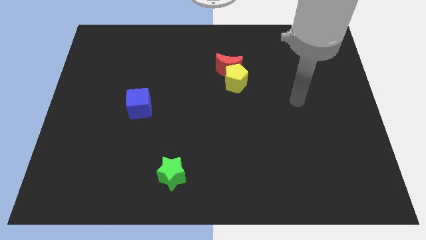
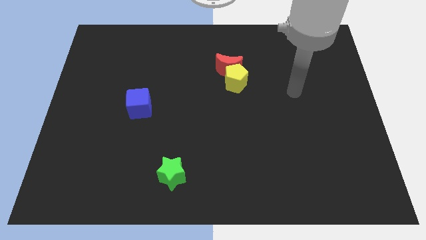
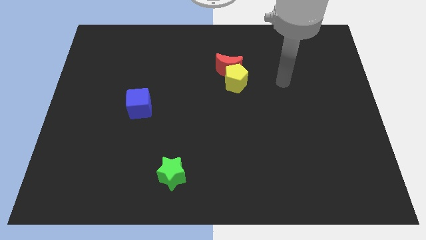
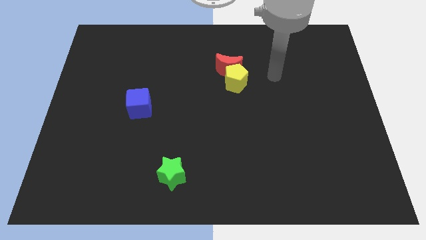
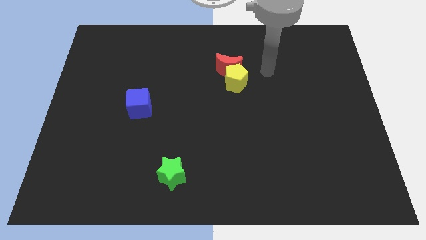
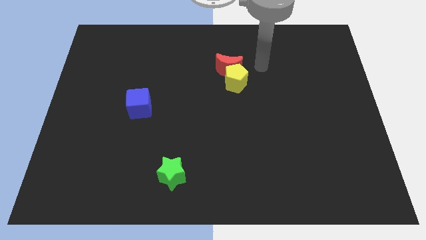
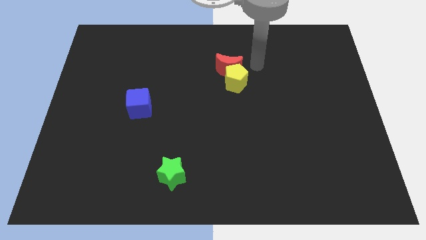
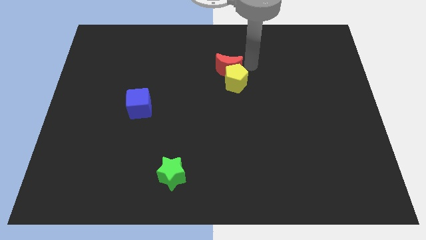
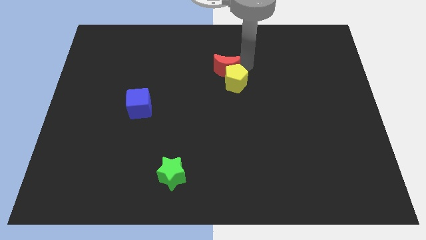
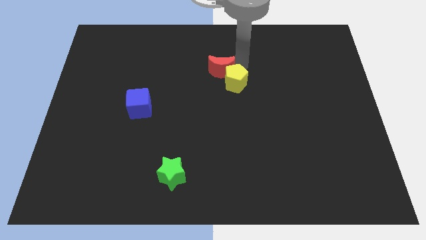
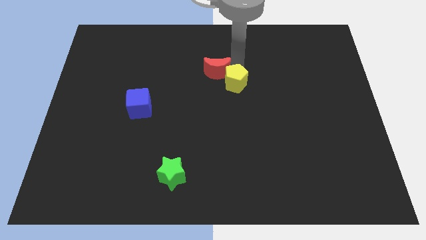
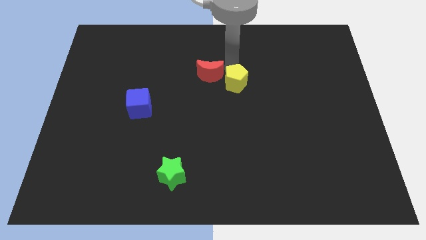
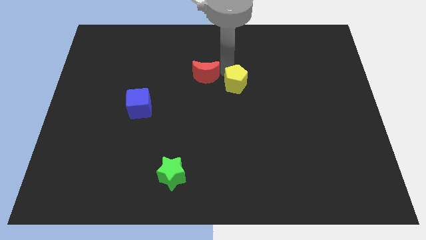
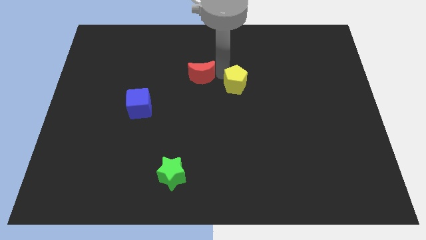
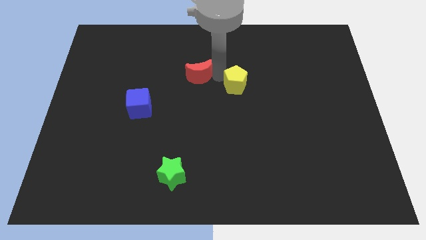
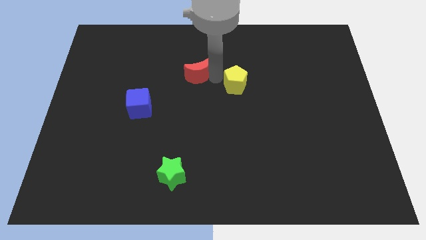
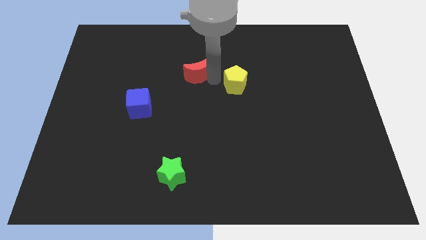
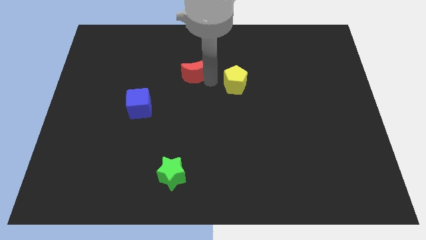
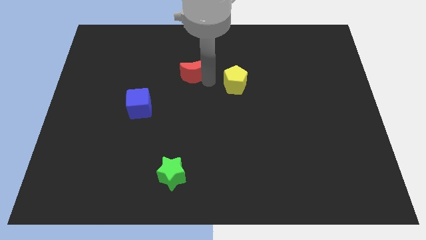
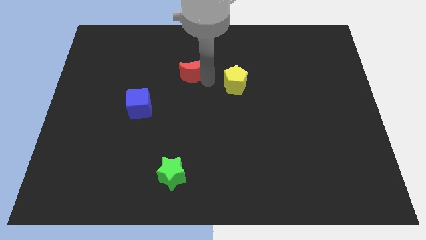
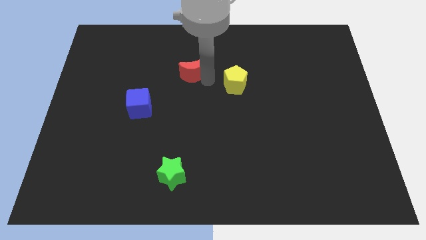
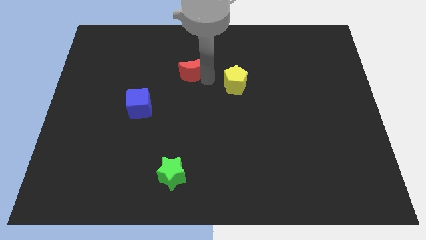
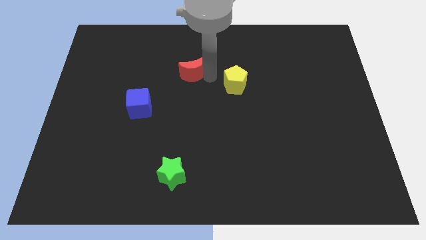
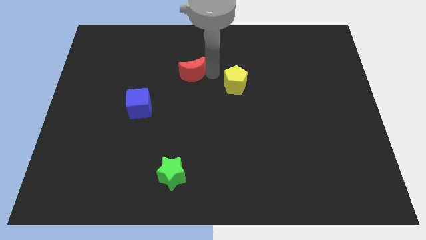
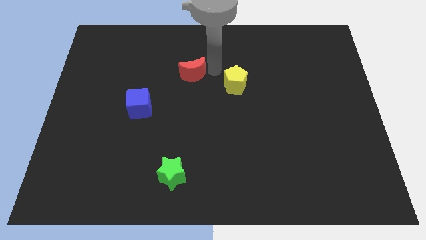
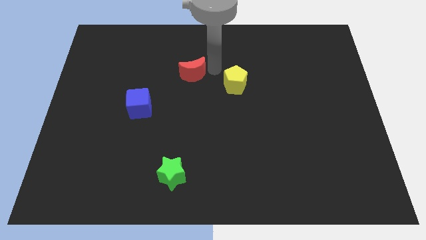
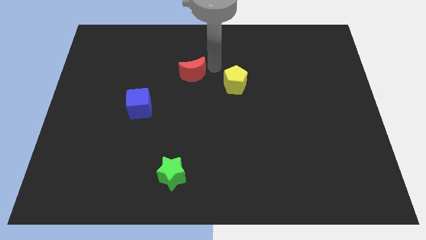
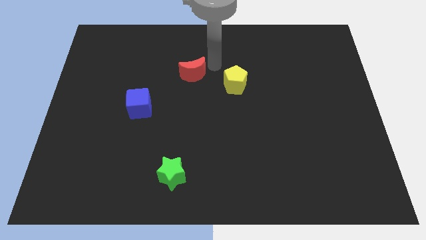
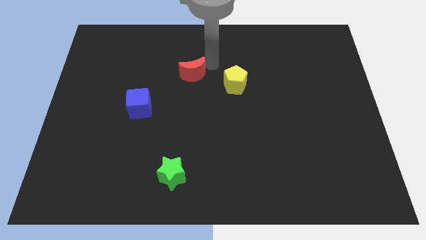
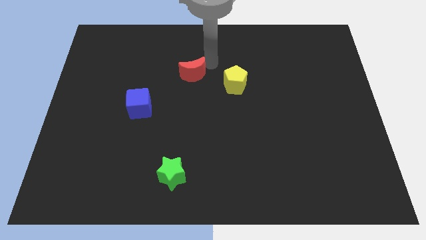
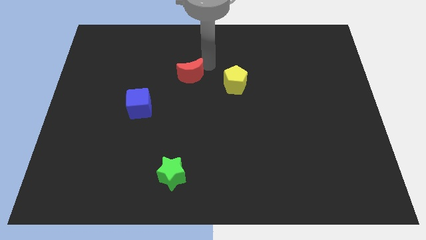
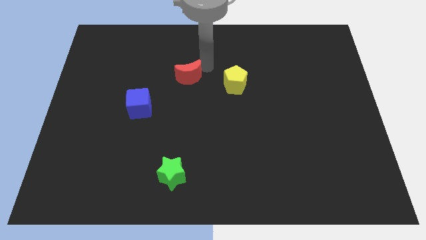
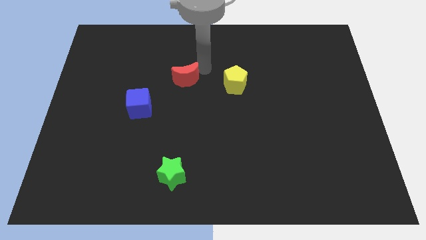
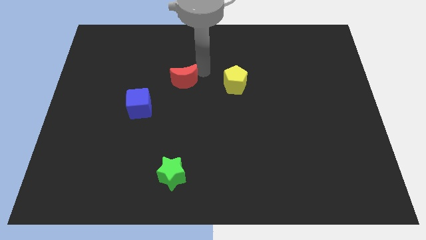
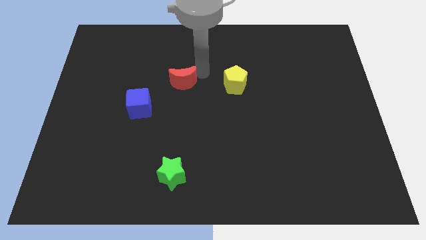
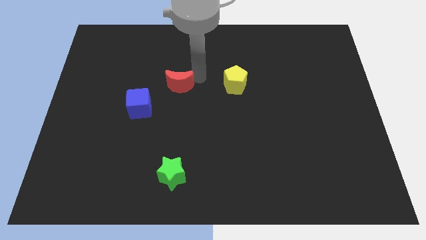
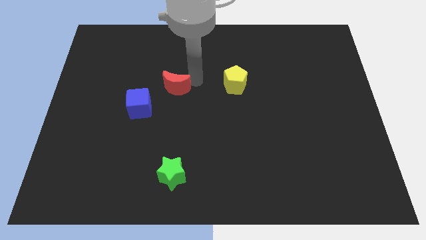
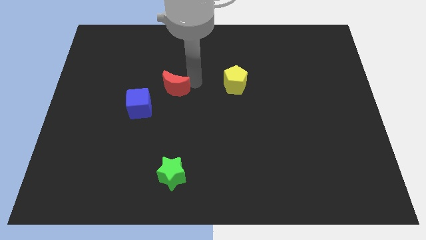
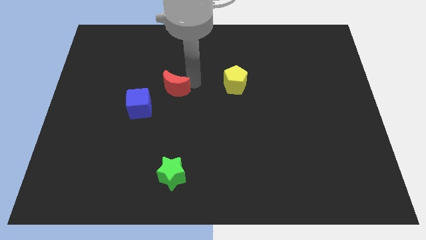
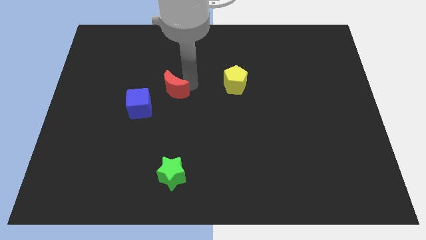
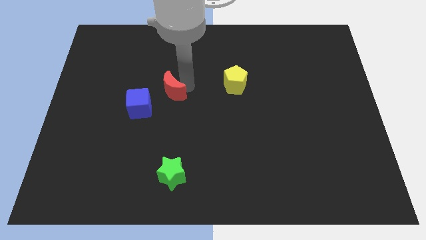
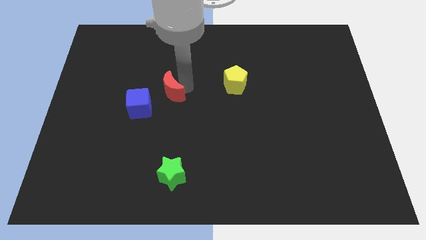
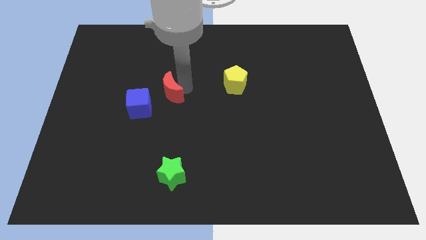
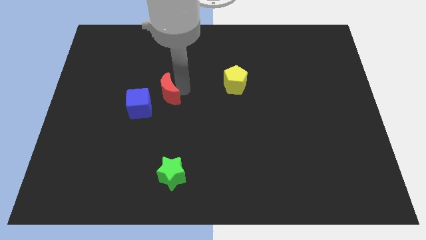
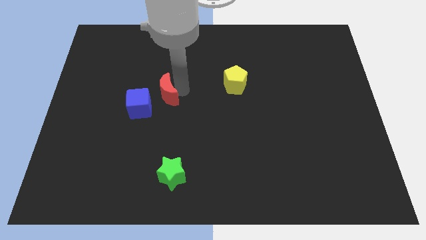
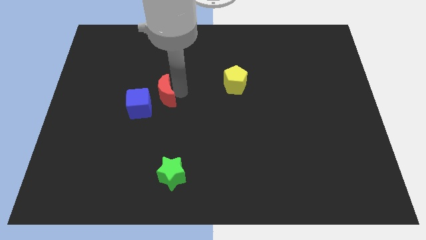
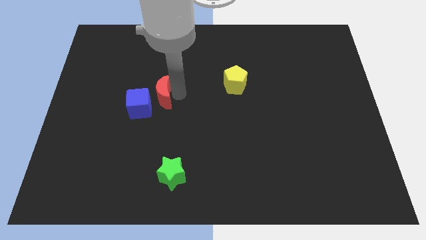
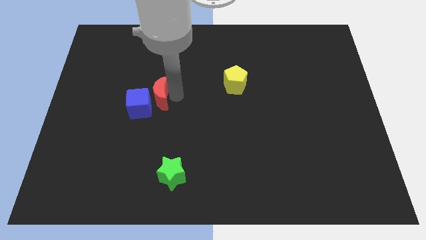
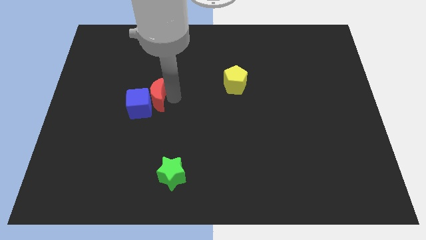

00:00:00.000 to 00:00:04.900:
move the moon to the blue cube

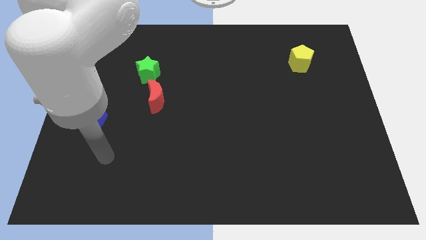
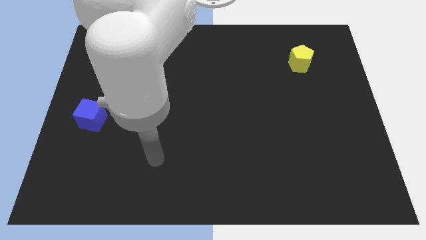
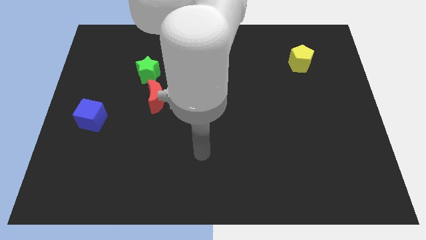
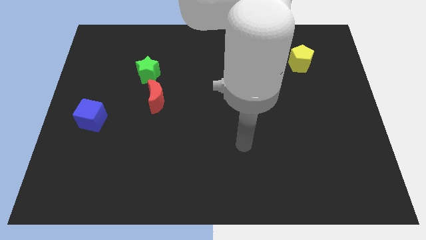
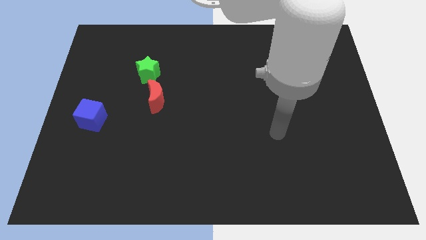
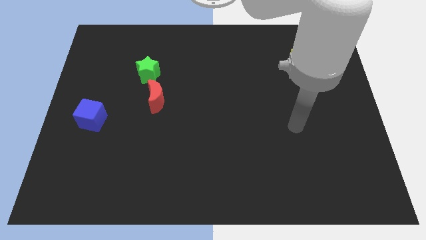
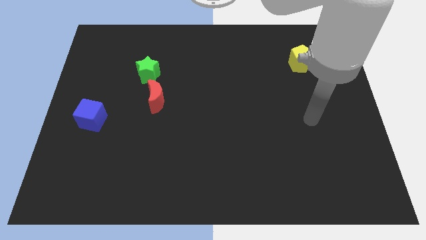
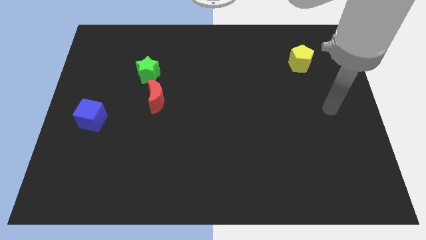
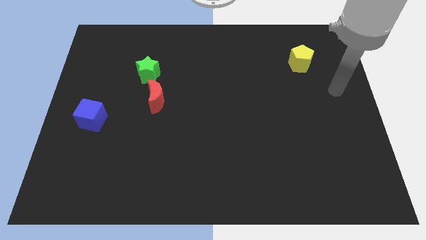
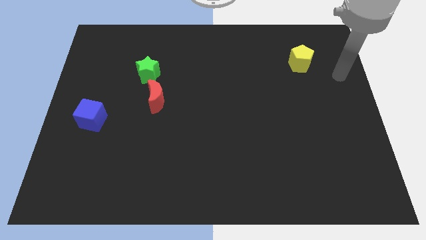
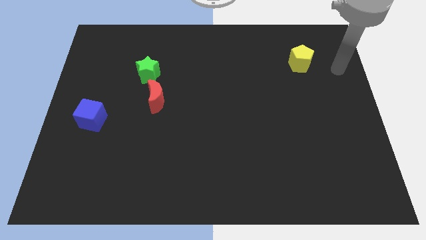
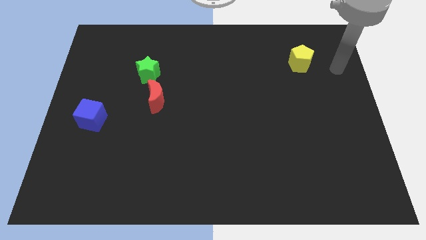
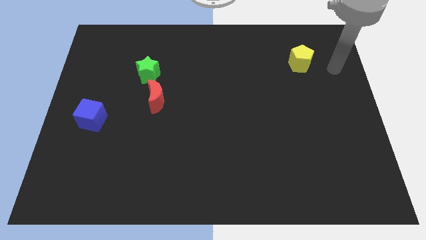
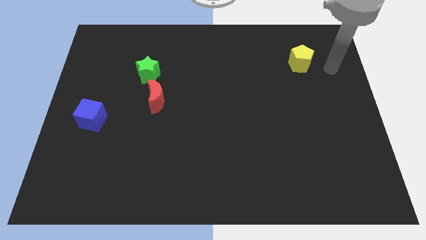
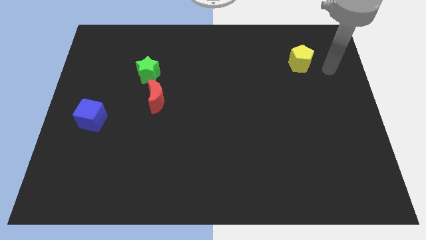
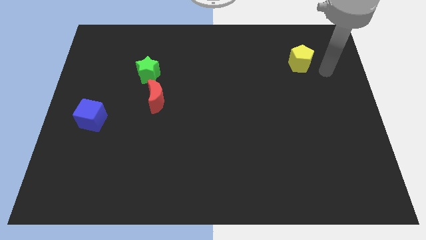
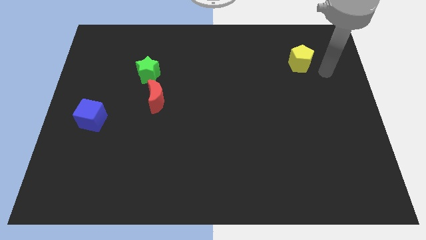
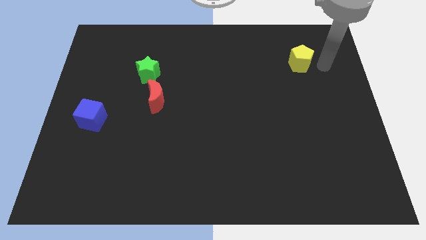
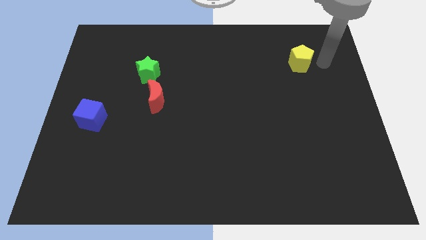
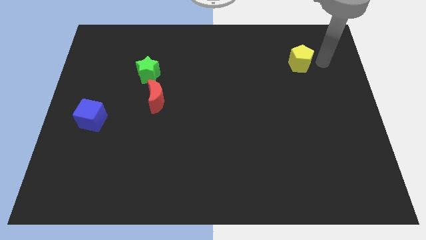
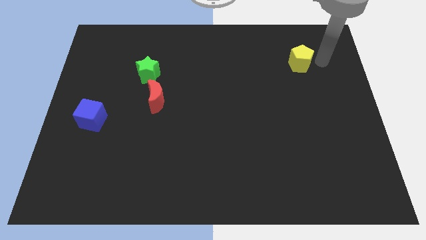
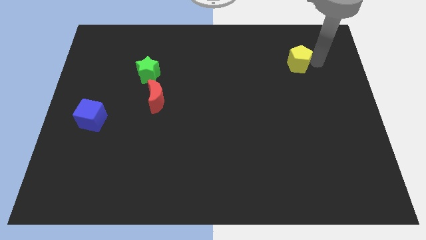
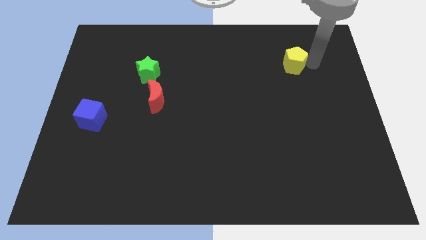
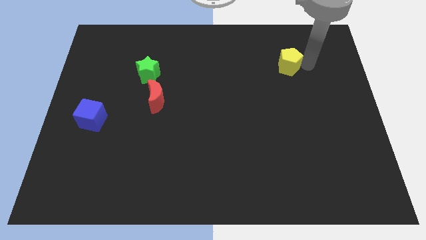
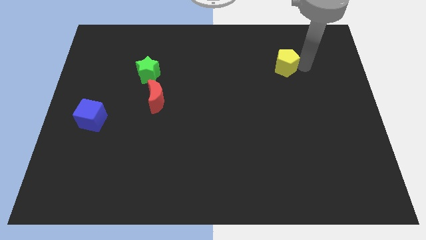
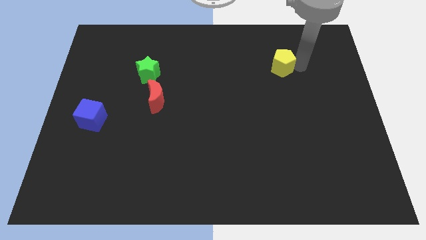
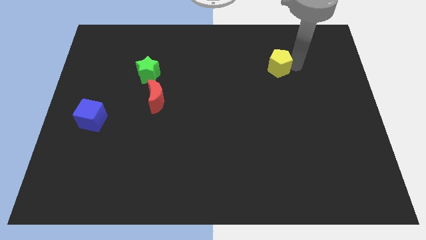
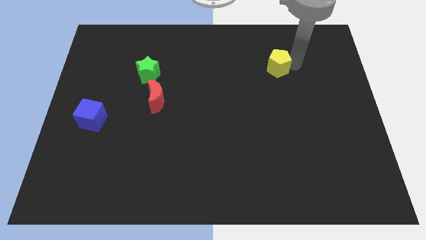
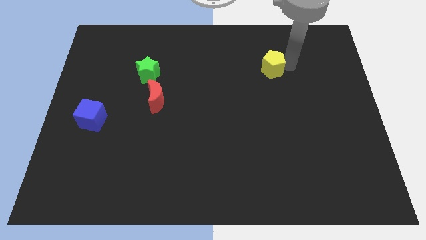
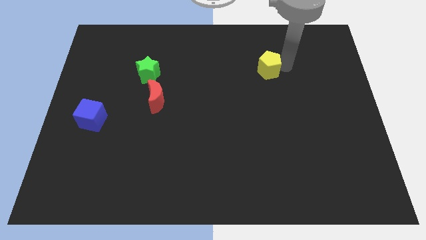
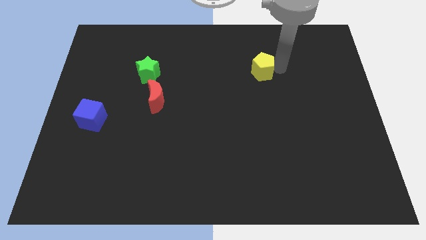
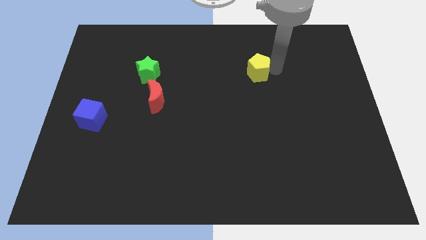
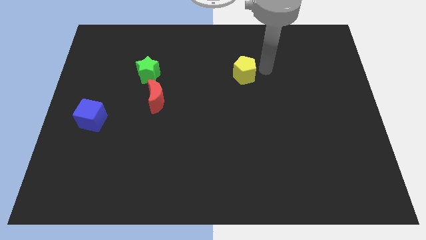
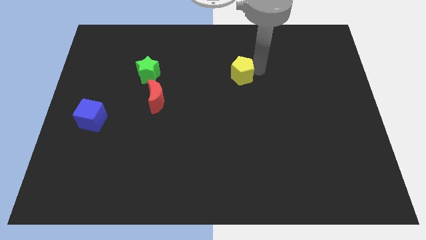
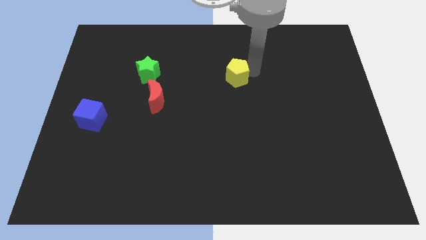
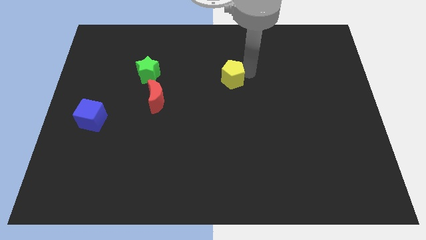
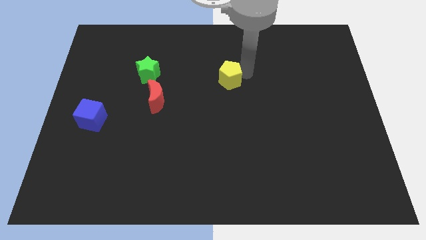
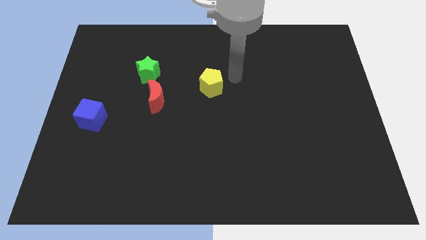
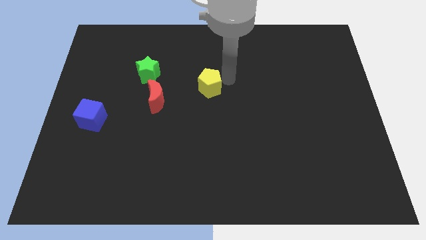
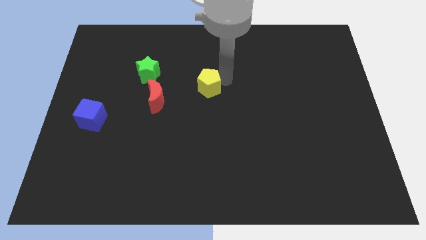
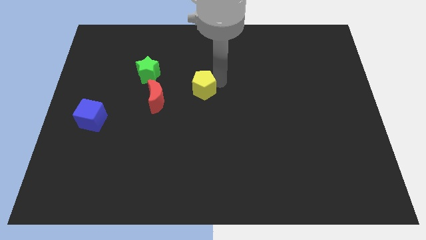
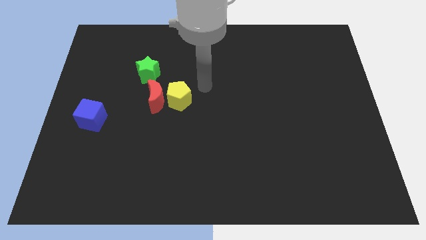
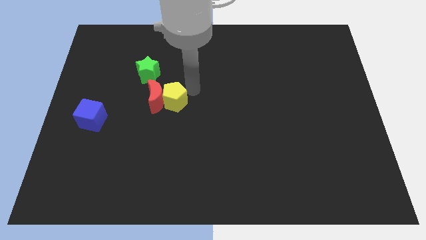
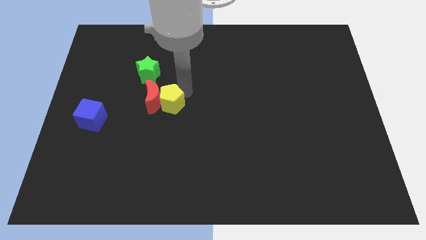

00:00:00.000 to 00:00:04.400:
move the yellow block towards the moon
